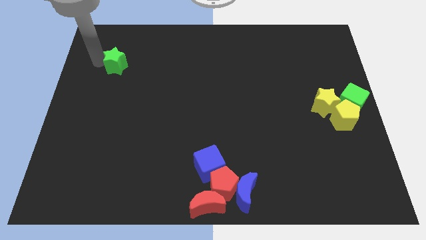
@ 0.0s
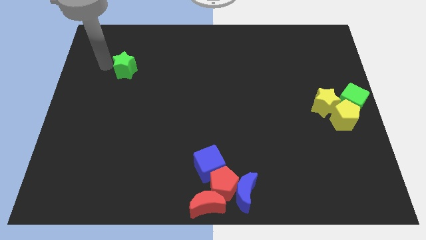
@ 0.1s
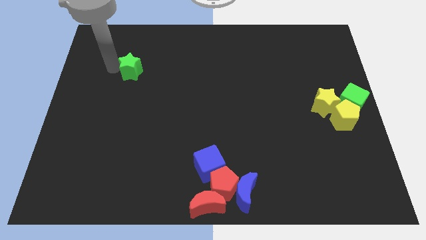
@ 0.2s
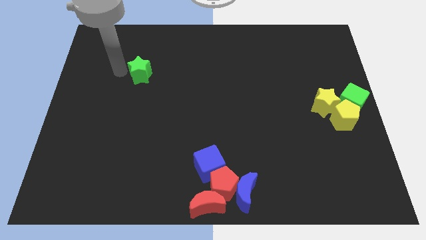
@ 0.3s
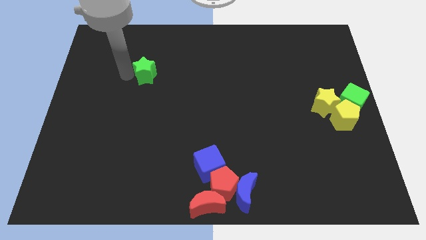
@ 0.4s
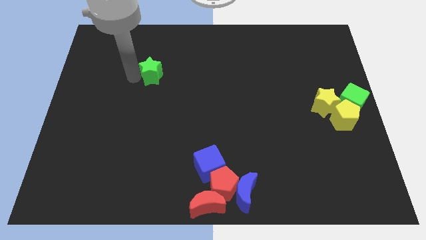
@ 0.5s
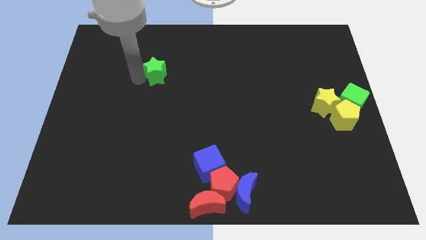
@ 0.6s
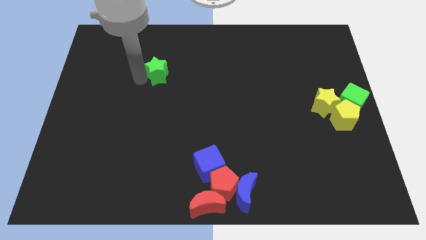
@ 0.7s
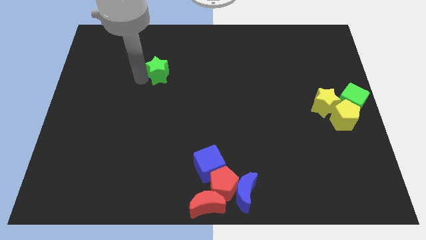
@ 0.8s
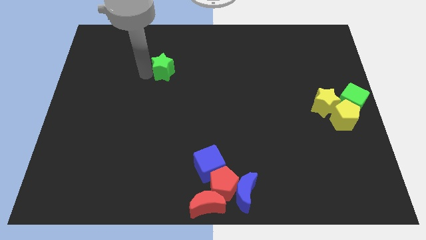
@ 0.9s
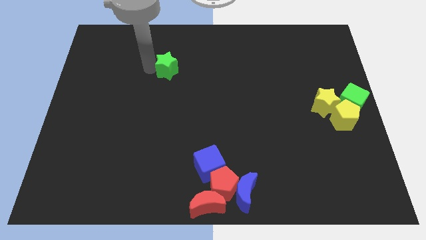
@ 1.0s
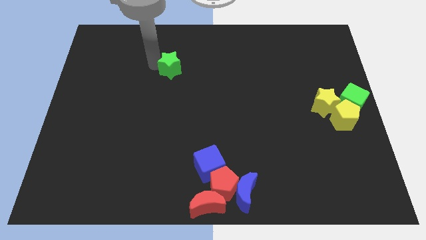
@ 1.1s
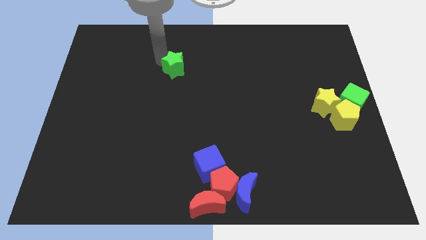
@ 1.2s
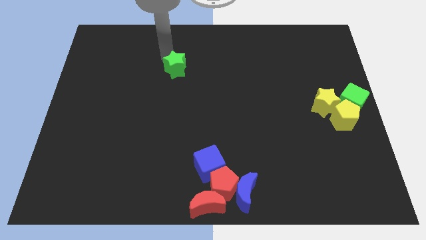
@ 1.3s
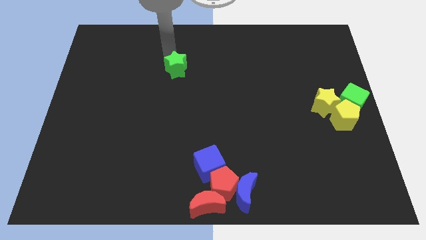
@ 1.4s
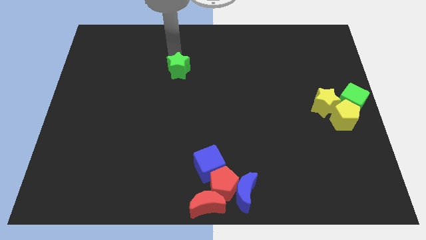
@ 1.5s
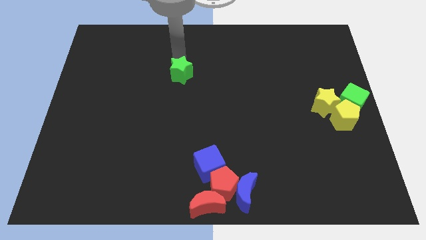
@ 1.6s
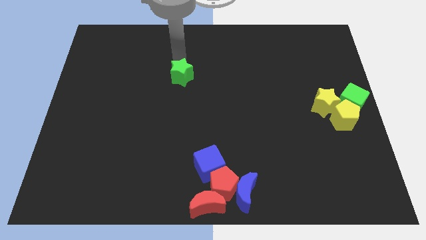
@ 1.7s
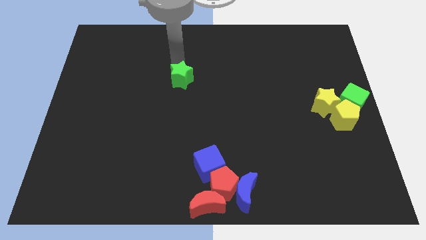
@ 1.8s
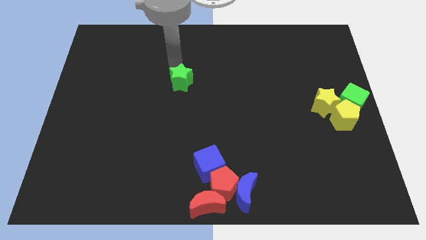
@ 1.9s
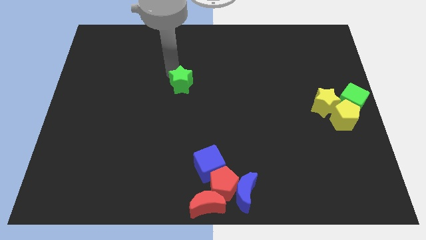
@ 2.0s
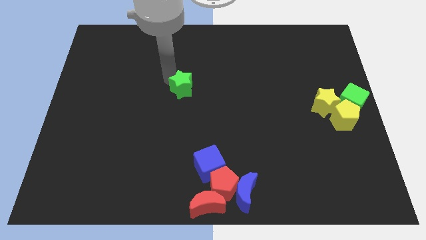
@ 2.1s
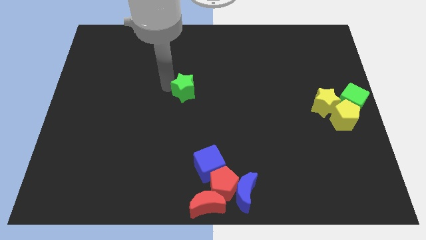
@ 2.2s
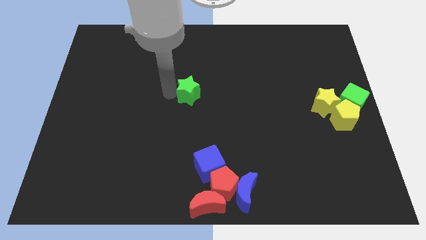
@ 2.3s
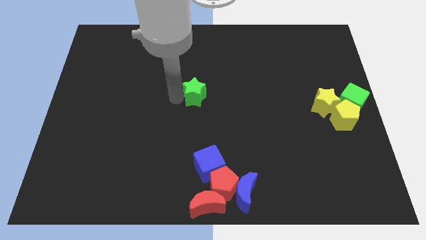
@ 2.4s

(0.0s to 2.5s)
move the green star to the center of the board

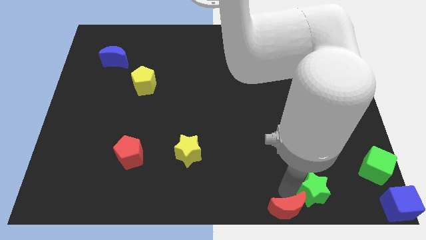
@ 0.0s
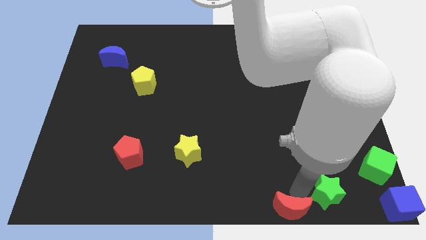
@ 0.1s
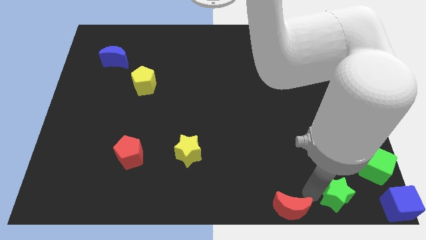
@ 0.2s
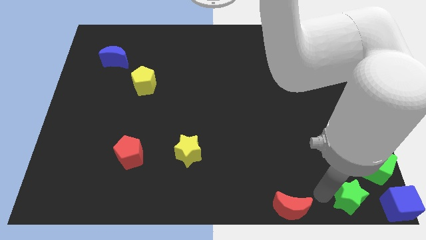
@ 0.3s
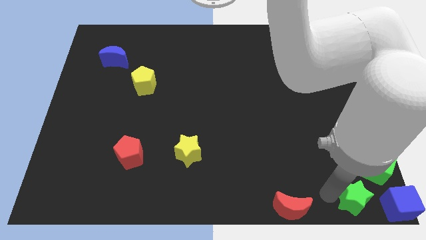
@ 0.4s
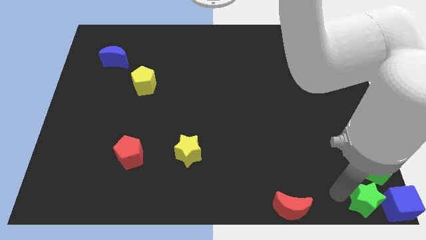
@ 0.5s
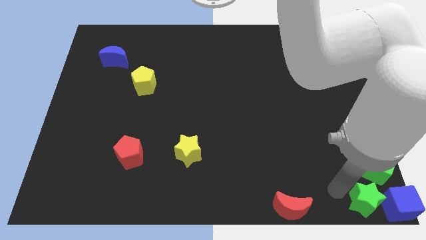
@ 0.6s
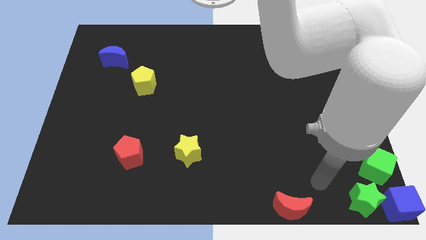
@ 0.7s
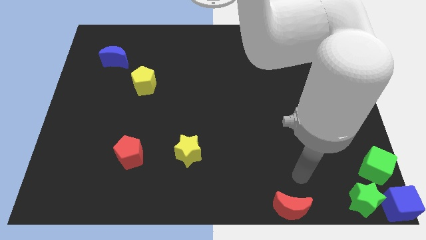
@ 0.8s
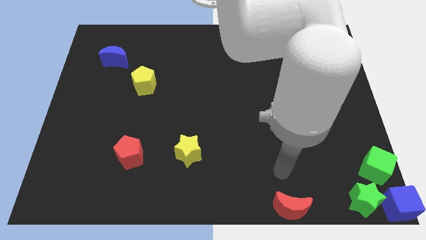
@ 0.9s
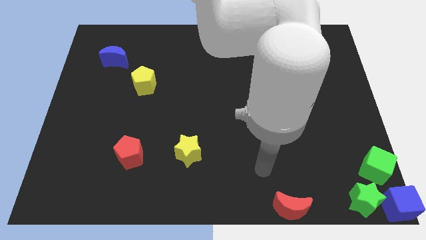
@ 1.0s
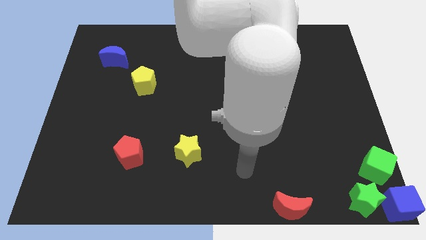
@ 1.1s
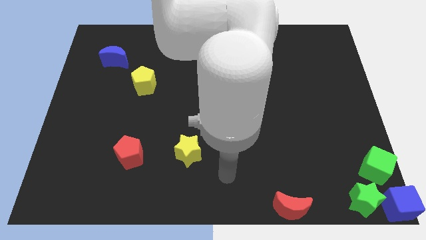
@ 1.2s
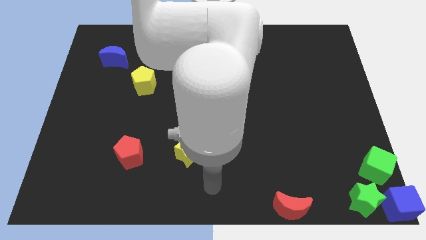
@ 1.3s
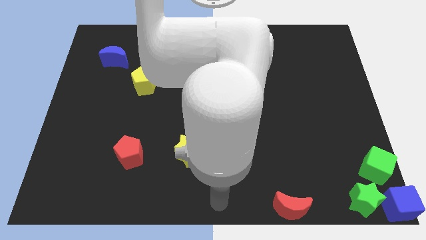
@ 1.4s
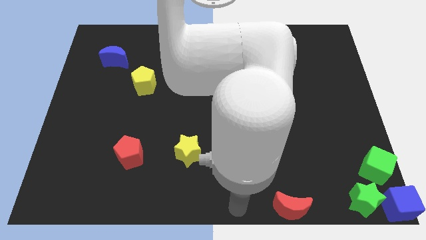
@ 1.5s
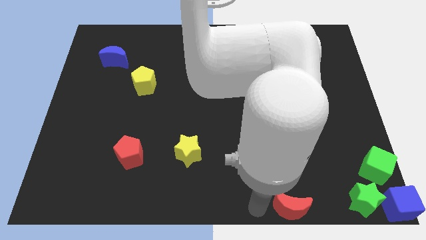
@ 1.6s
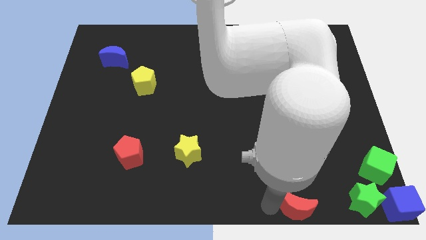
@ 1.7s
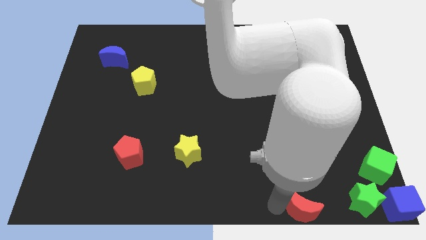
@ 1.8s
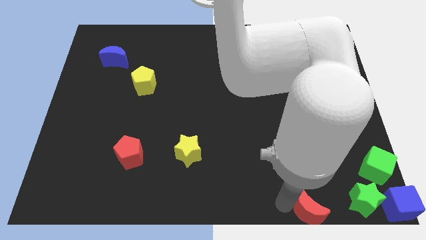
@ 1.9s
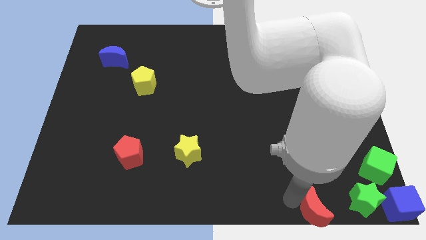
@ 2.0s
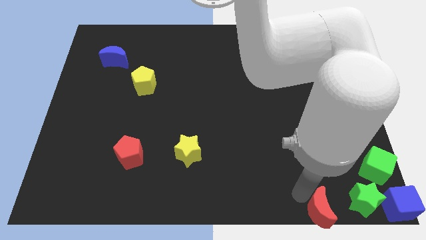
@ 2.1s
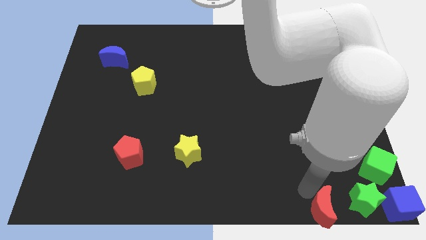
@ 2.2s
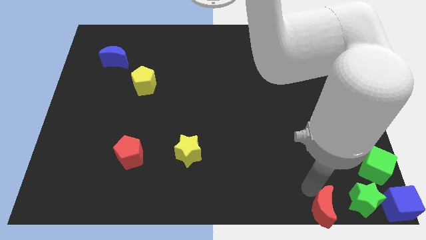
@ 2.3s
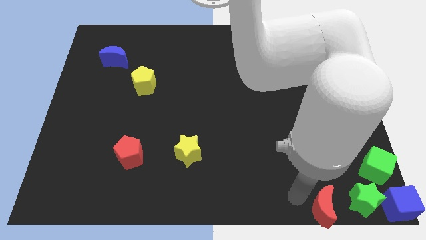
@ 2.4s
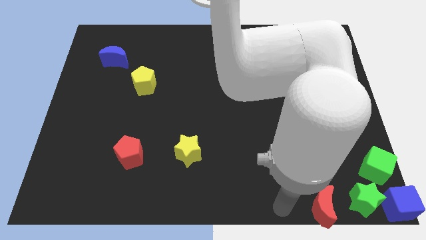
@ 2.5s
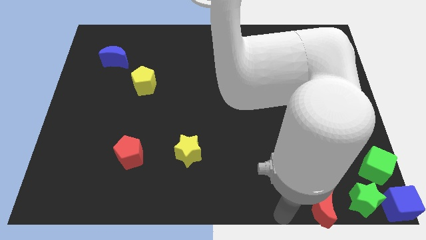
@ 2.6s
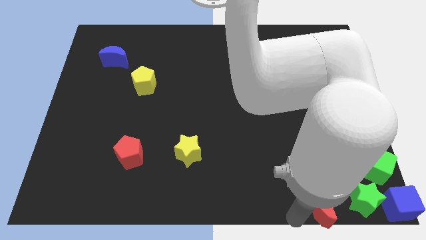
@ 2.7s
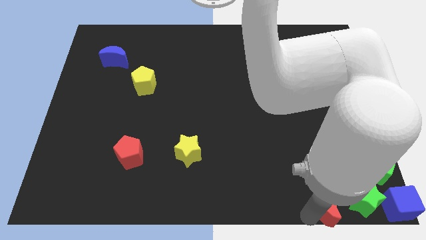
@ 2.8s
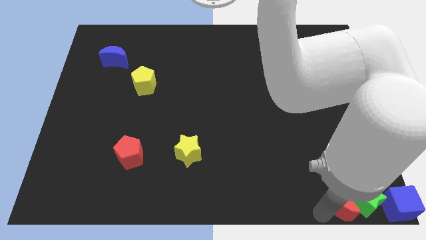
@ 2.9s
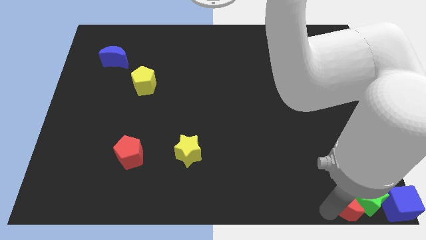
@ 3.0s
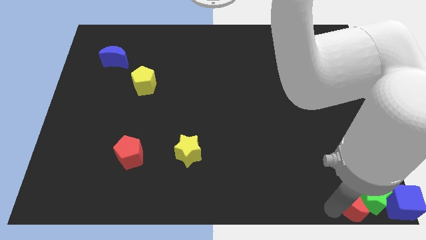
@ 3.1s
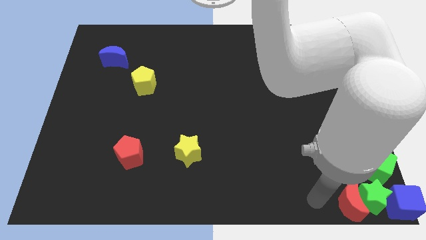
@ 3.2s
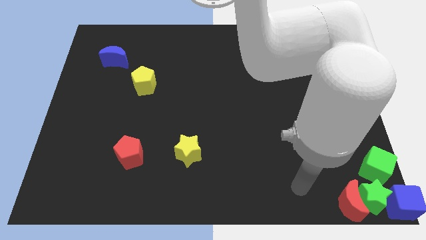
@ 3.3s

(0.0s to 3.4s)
move the green star and red crescent to the bottom right side of the board

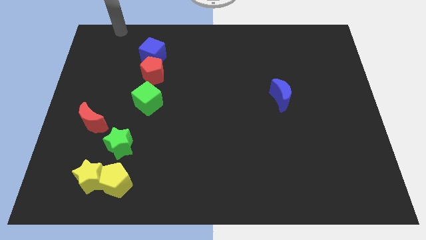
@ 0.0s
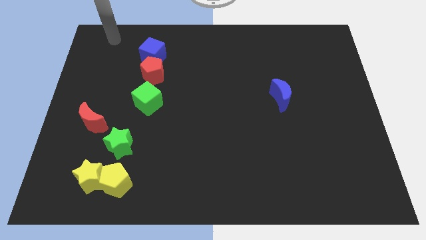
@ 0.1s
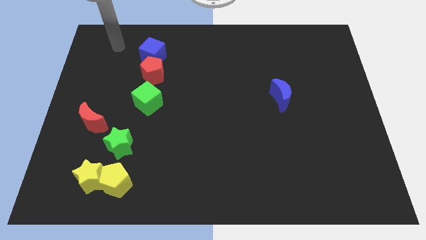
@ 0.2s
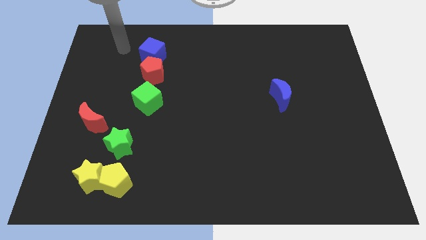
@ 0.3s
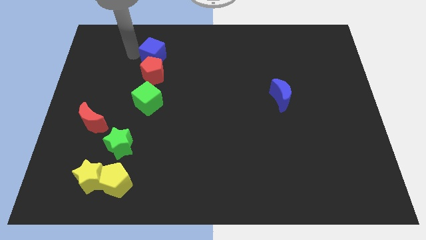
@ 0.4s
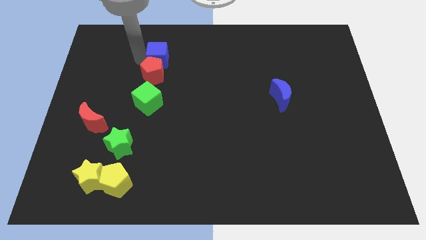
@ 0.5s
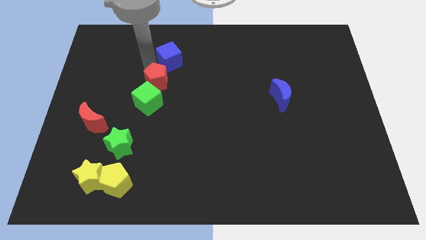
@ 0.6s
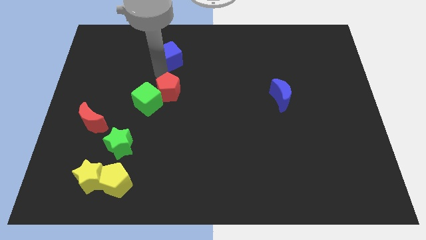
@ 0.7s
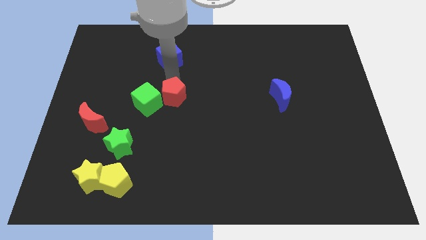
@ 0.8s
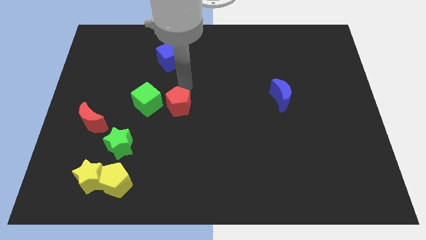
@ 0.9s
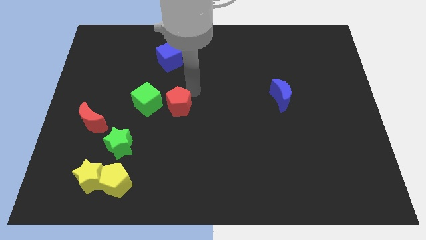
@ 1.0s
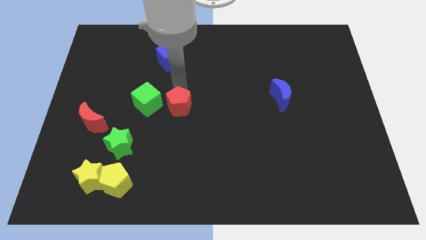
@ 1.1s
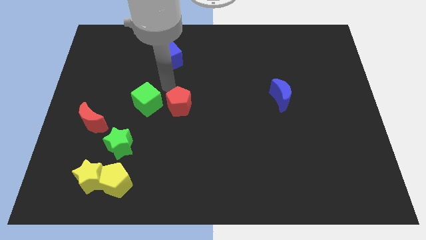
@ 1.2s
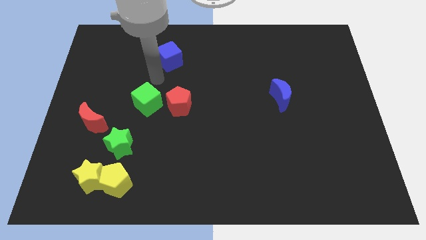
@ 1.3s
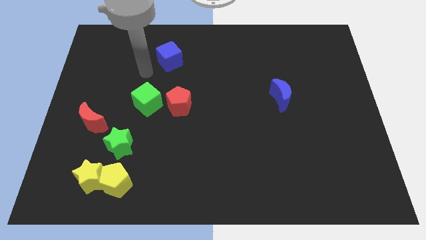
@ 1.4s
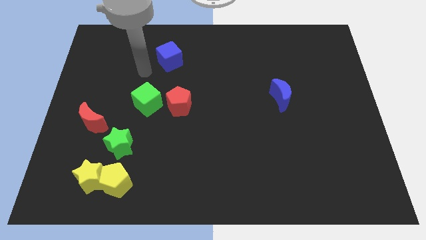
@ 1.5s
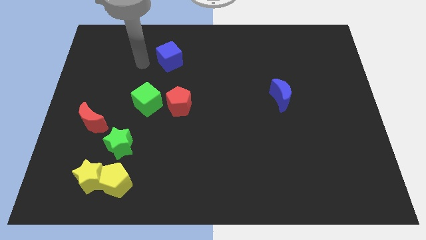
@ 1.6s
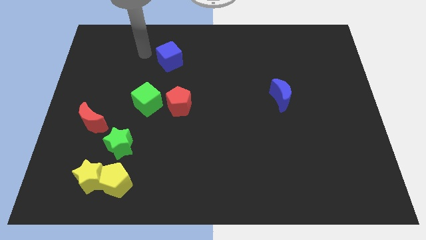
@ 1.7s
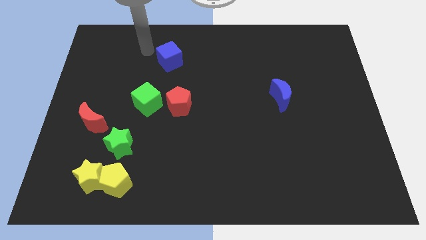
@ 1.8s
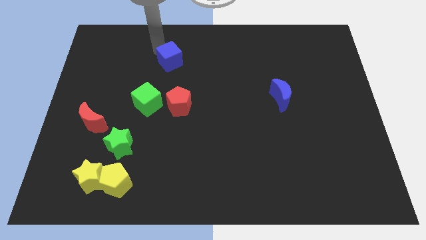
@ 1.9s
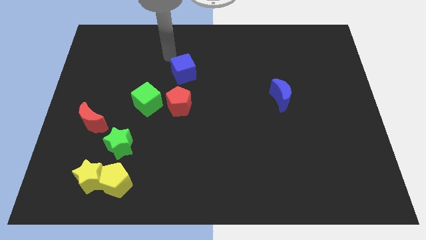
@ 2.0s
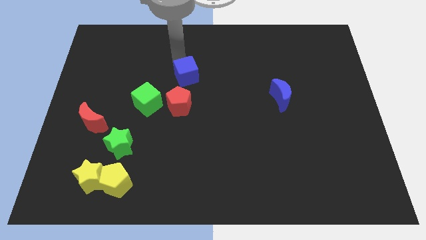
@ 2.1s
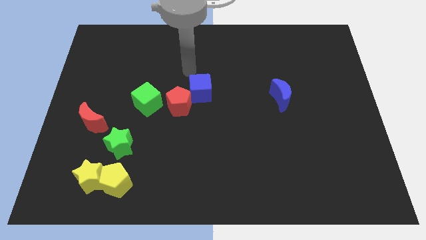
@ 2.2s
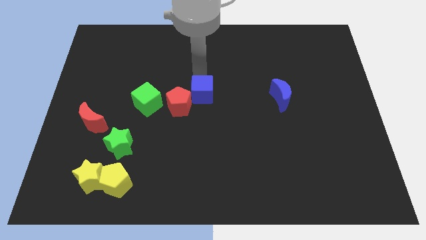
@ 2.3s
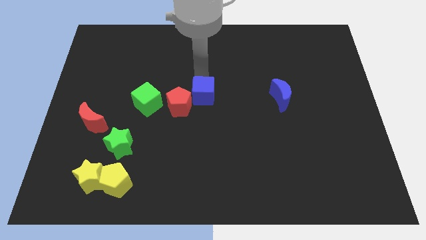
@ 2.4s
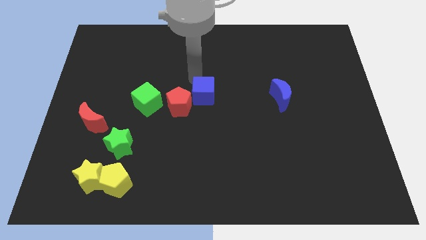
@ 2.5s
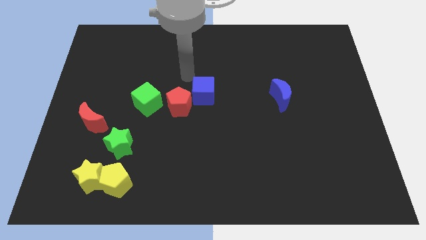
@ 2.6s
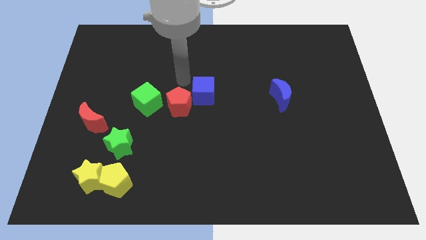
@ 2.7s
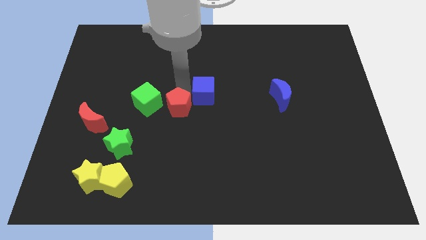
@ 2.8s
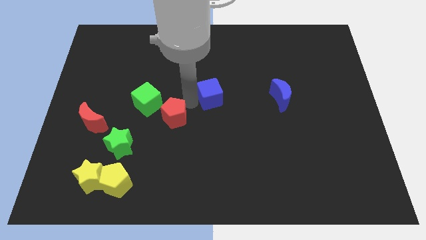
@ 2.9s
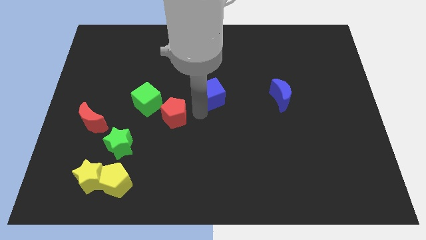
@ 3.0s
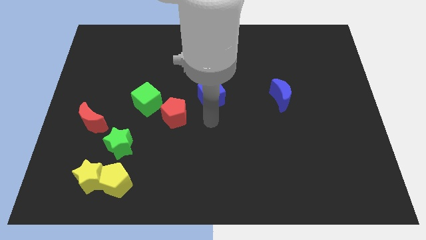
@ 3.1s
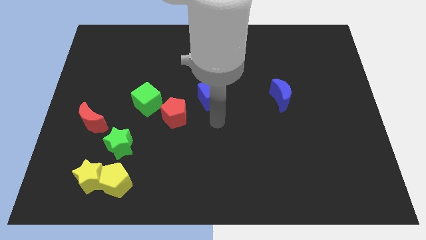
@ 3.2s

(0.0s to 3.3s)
place the blue cube in between the blue moon and green cube
